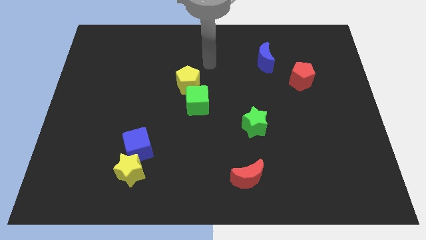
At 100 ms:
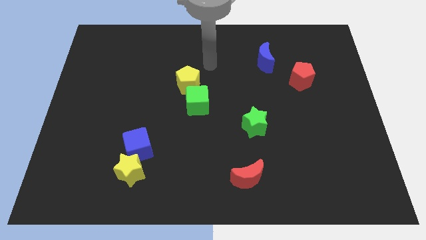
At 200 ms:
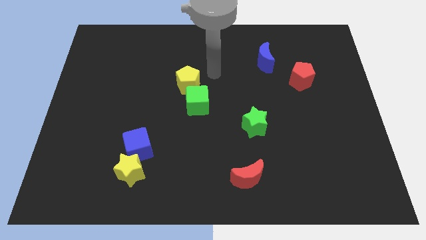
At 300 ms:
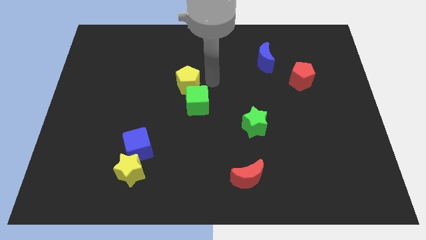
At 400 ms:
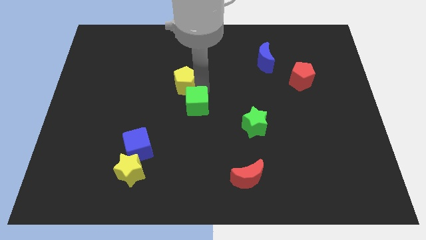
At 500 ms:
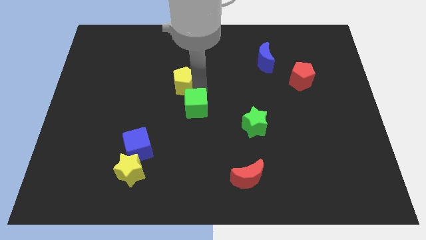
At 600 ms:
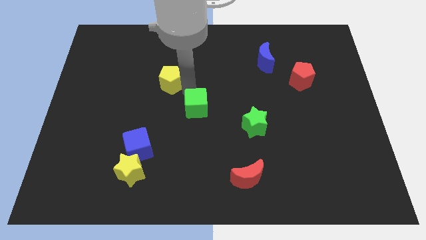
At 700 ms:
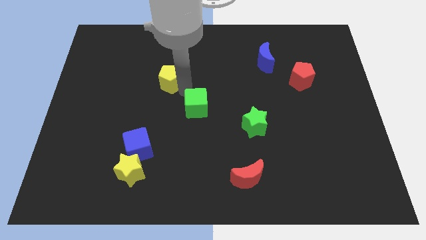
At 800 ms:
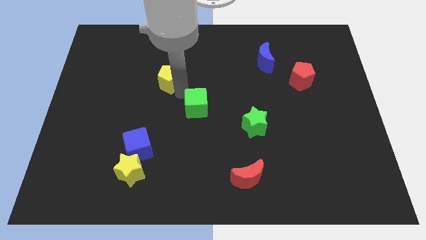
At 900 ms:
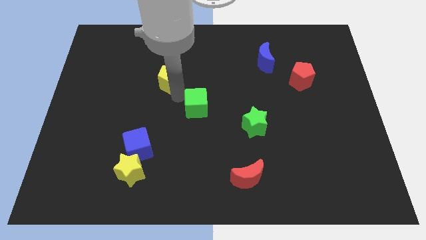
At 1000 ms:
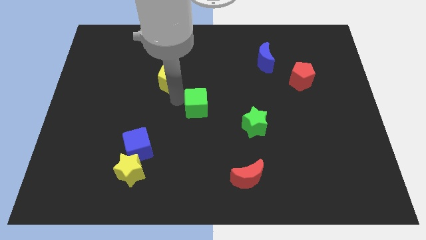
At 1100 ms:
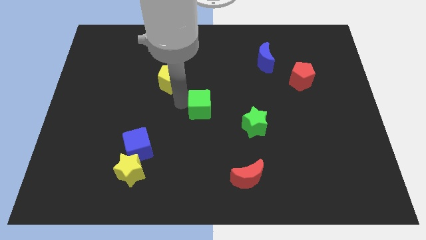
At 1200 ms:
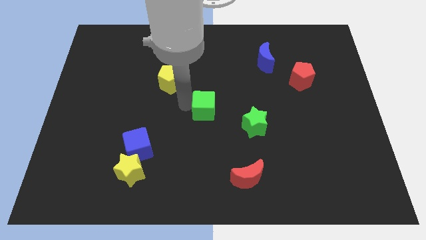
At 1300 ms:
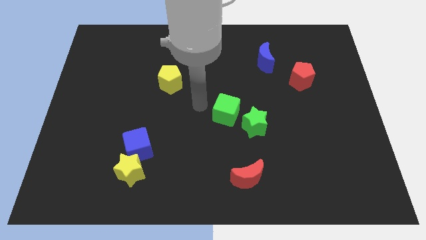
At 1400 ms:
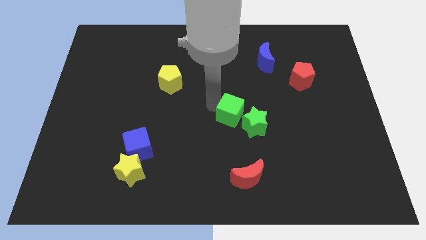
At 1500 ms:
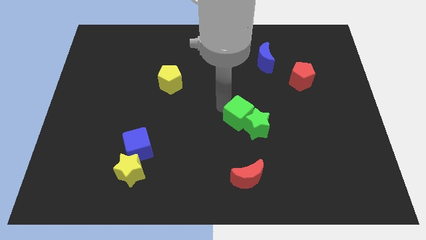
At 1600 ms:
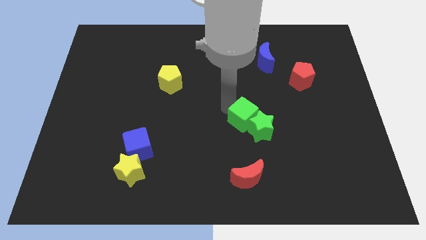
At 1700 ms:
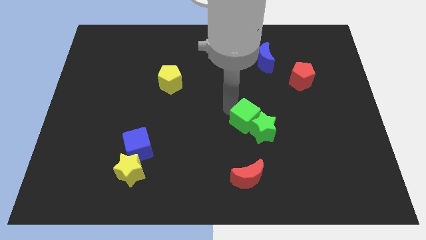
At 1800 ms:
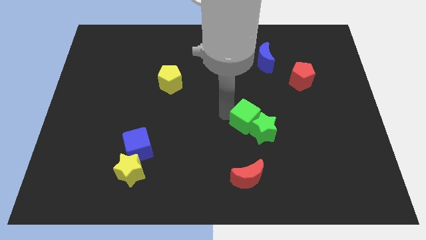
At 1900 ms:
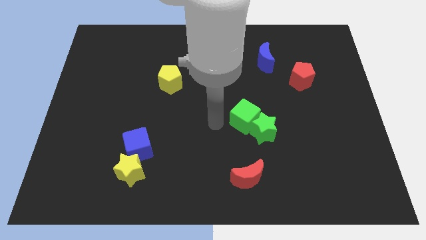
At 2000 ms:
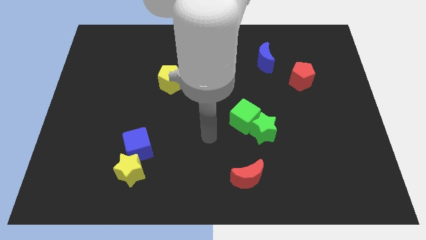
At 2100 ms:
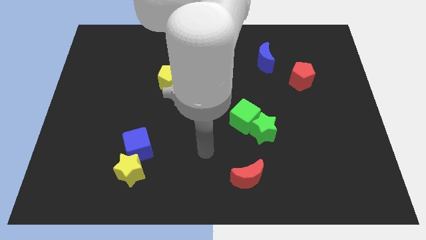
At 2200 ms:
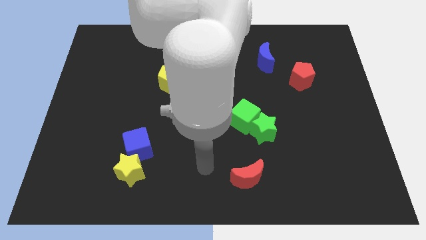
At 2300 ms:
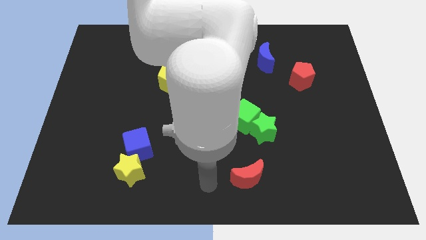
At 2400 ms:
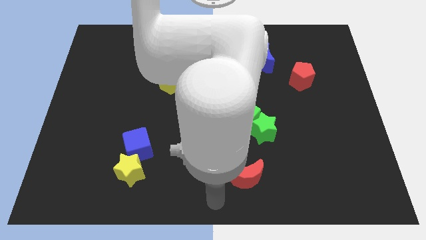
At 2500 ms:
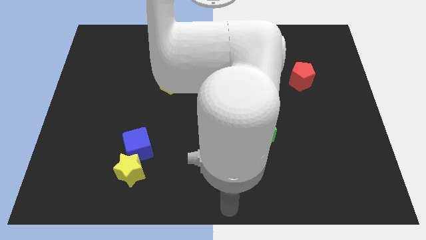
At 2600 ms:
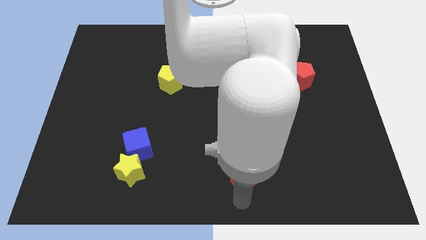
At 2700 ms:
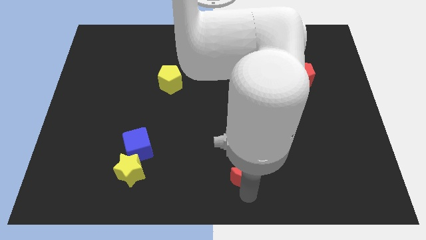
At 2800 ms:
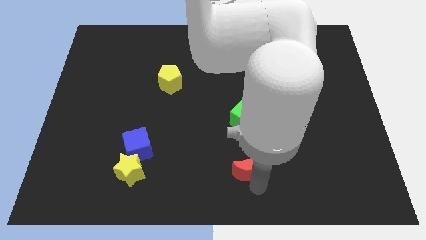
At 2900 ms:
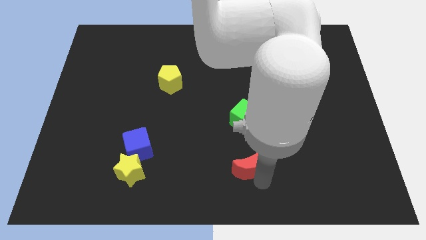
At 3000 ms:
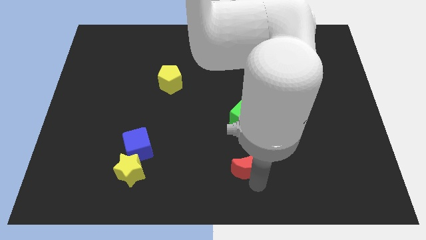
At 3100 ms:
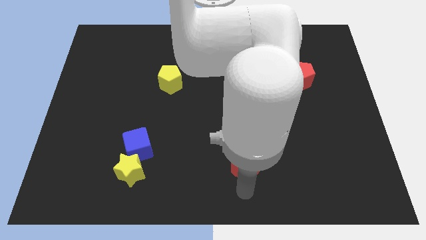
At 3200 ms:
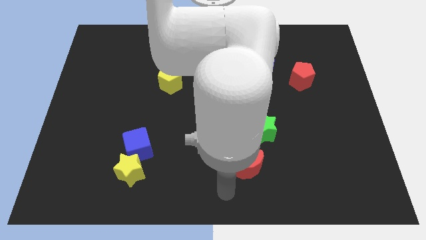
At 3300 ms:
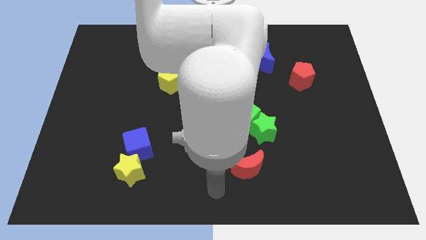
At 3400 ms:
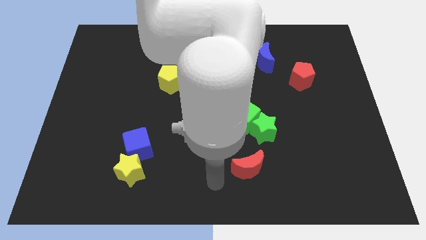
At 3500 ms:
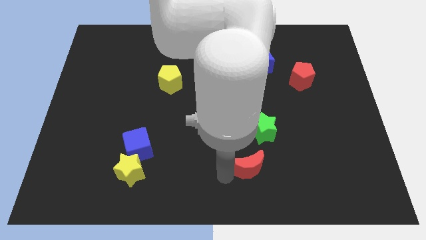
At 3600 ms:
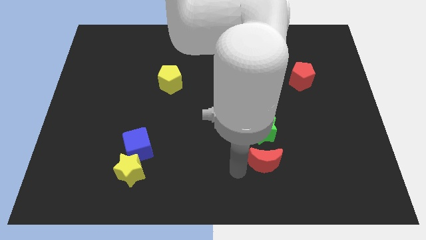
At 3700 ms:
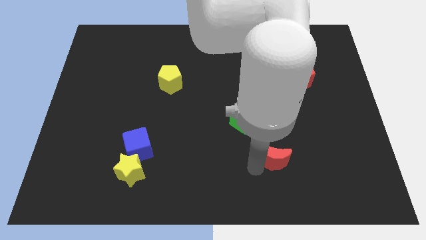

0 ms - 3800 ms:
move the green blocks and red moon to the center

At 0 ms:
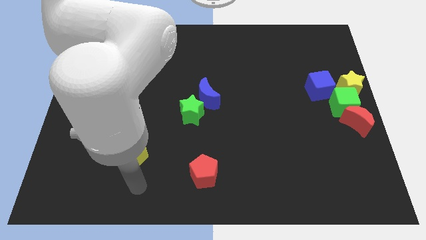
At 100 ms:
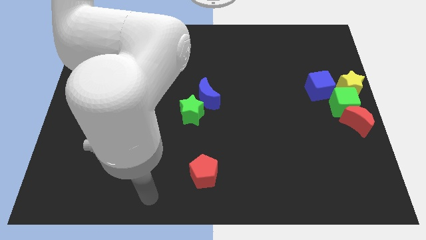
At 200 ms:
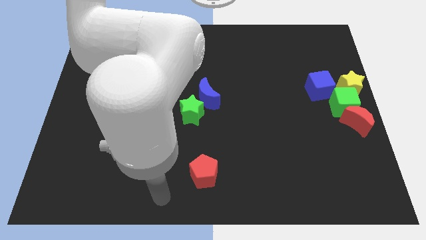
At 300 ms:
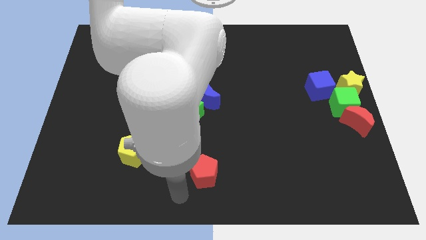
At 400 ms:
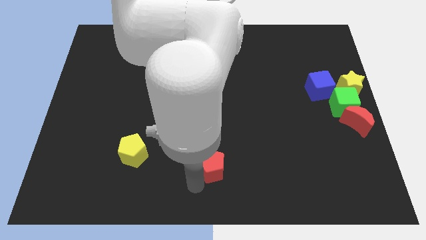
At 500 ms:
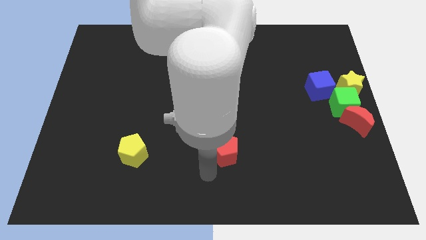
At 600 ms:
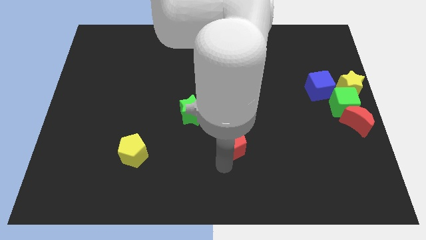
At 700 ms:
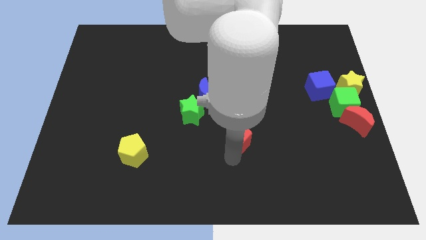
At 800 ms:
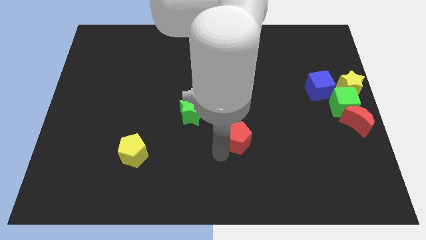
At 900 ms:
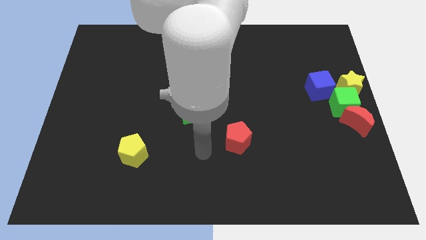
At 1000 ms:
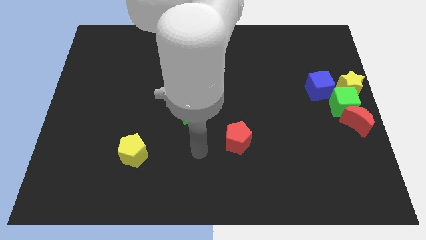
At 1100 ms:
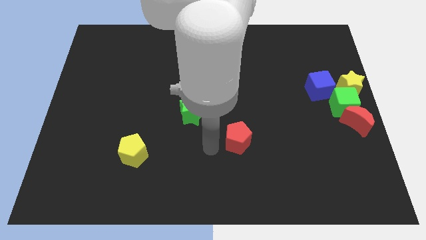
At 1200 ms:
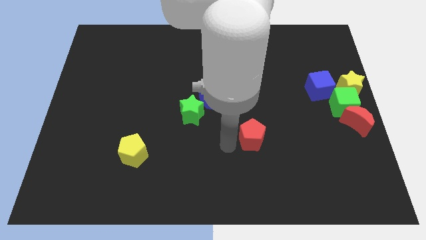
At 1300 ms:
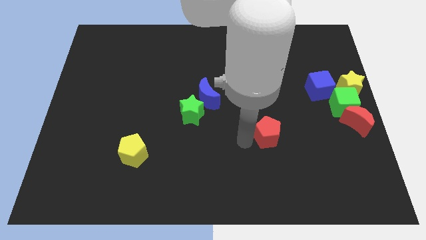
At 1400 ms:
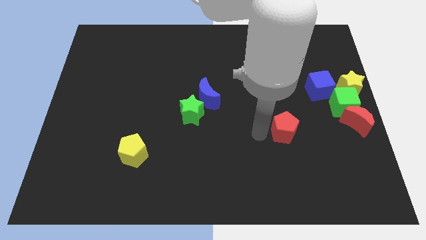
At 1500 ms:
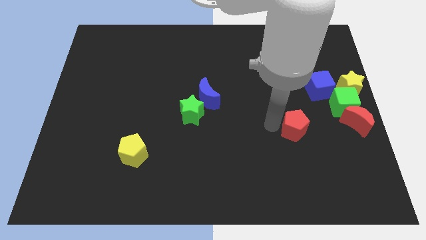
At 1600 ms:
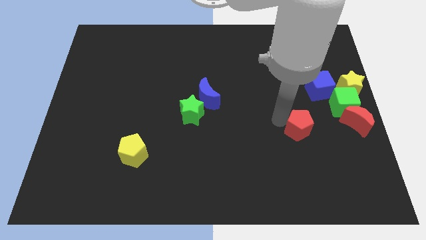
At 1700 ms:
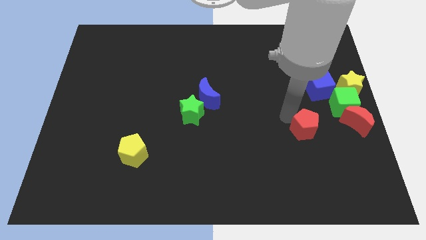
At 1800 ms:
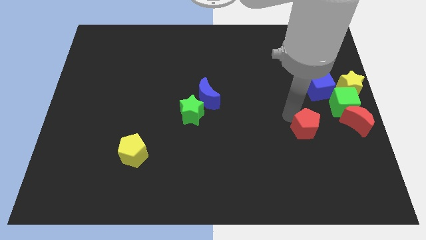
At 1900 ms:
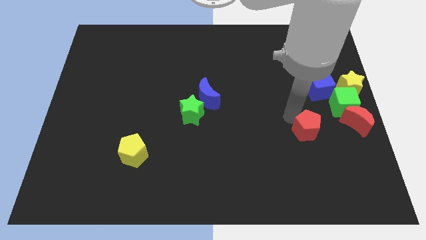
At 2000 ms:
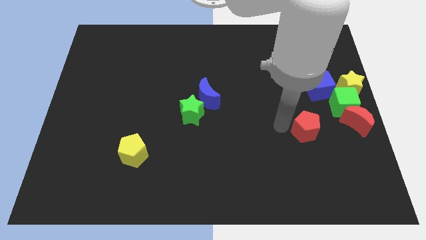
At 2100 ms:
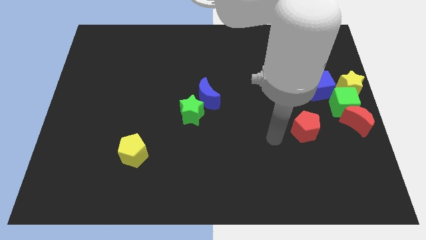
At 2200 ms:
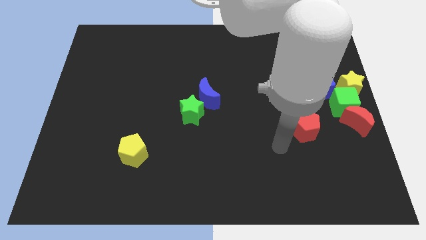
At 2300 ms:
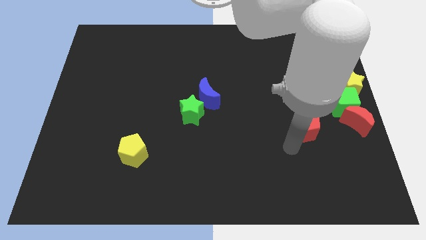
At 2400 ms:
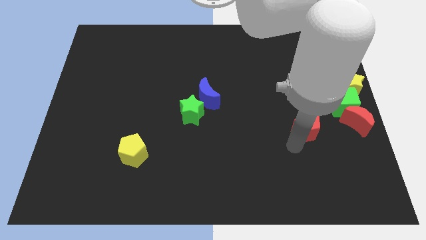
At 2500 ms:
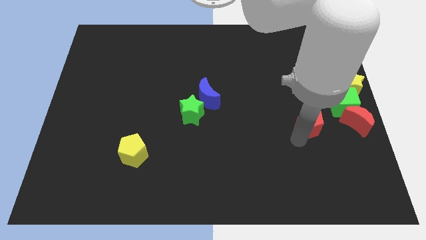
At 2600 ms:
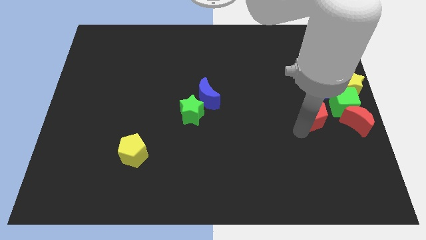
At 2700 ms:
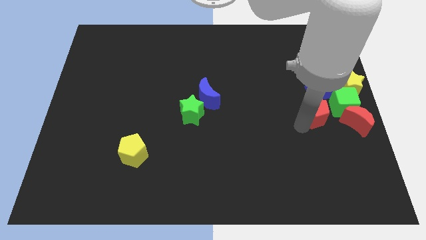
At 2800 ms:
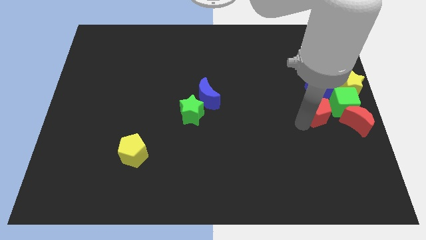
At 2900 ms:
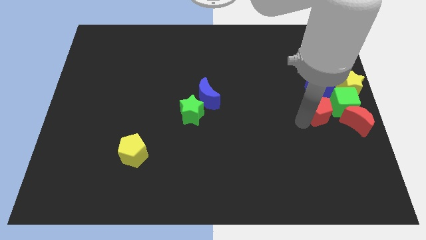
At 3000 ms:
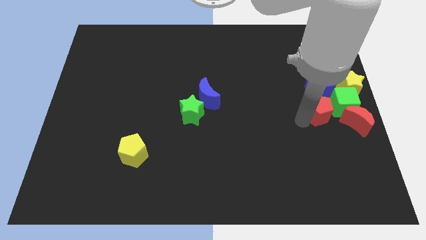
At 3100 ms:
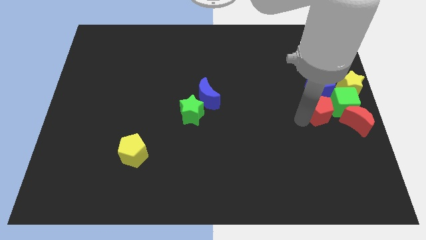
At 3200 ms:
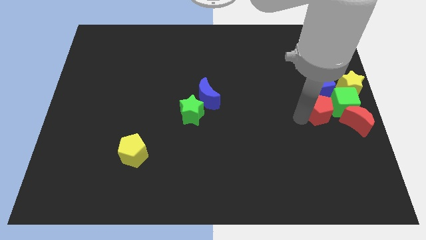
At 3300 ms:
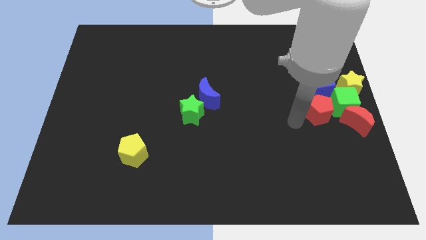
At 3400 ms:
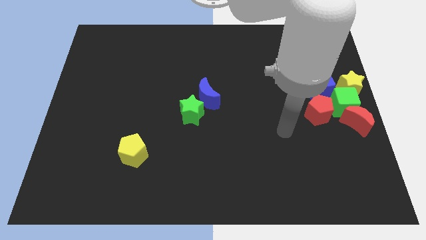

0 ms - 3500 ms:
move the red pentagon to the left of the green cube

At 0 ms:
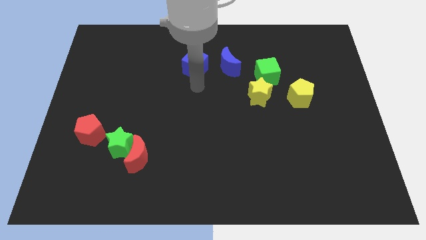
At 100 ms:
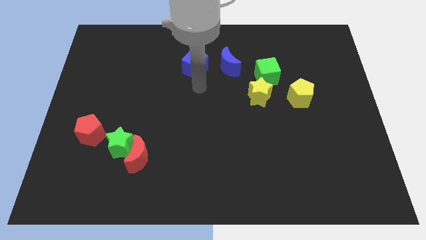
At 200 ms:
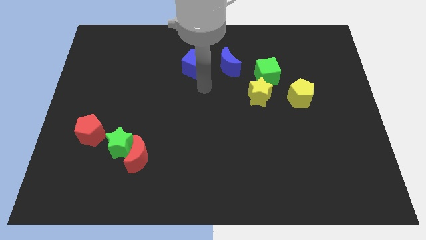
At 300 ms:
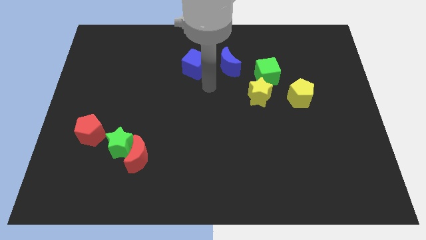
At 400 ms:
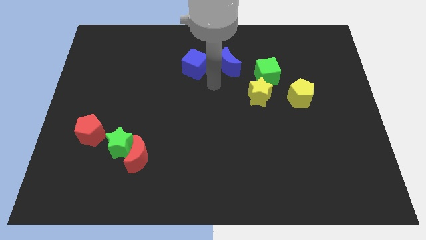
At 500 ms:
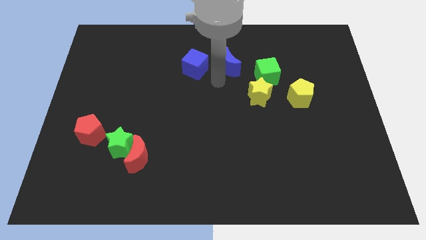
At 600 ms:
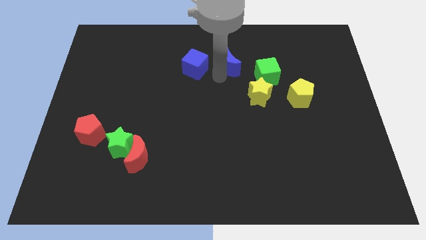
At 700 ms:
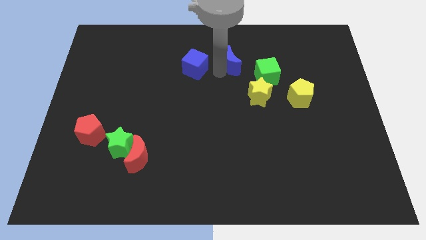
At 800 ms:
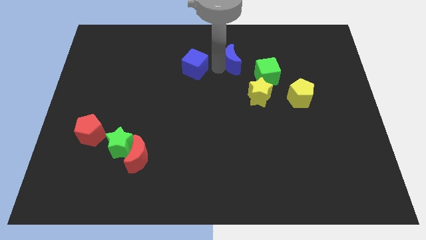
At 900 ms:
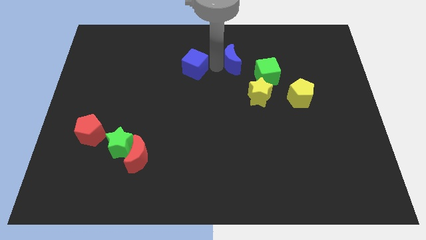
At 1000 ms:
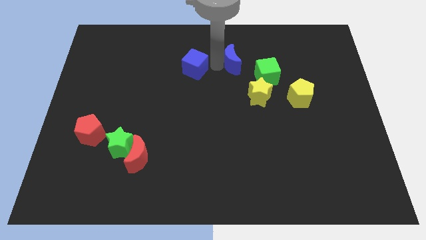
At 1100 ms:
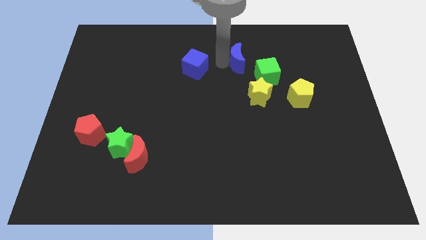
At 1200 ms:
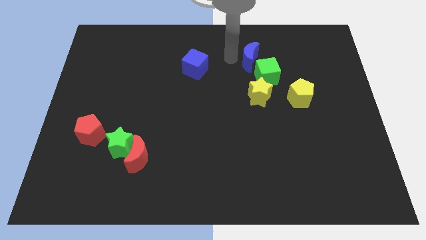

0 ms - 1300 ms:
slightly push the blue moon to the top left side of the green cube

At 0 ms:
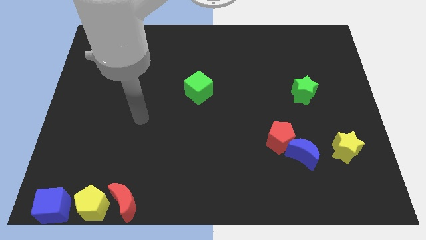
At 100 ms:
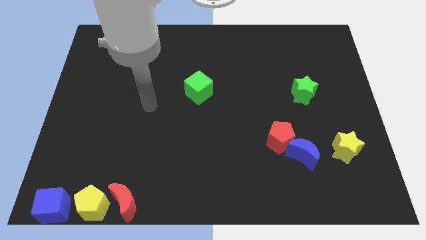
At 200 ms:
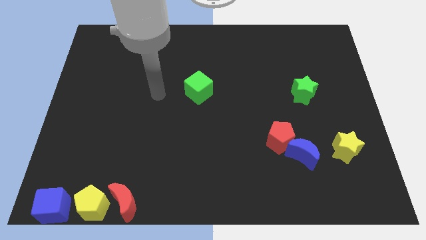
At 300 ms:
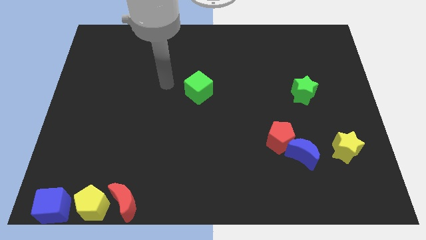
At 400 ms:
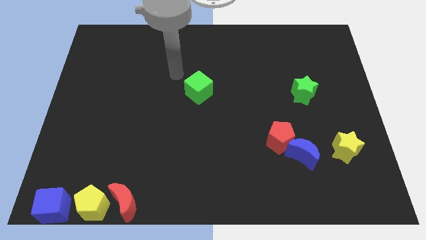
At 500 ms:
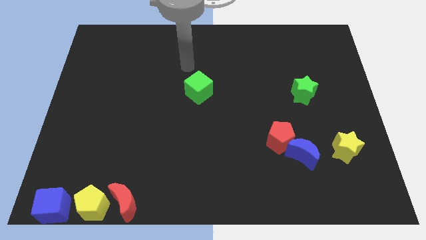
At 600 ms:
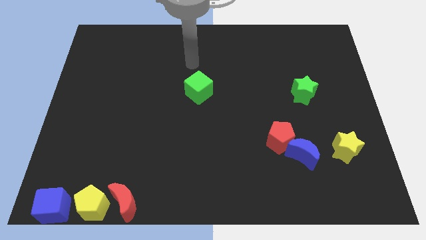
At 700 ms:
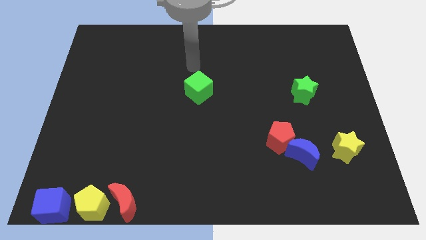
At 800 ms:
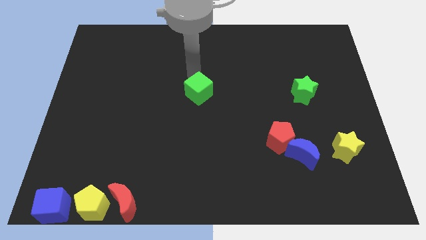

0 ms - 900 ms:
place the arm near the green cube
